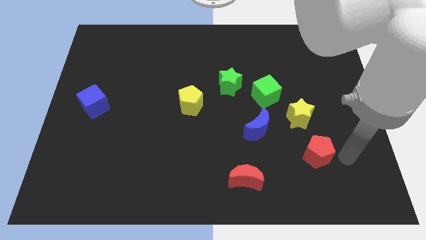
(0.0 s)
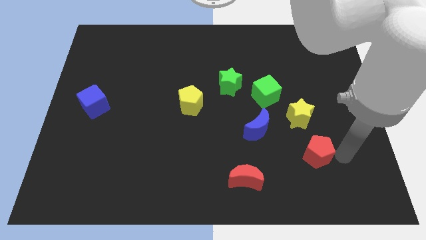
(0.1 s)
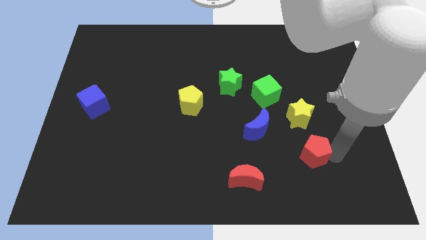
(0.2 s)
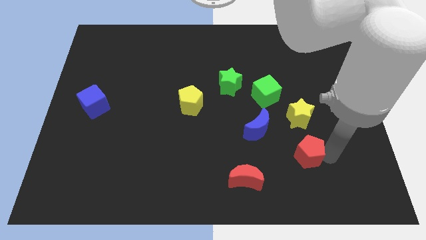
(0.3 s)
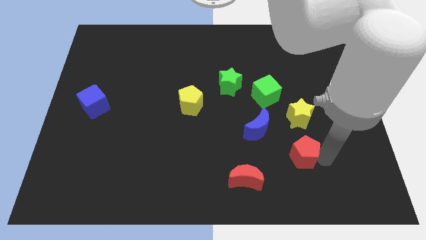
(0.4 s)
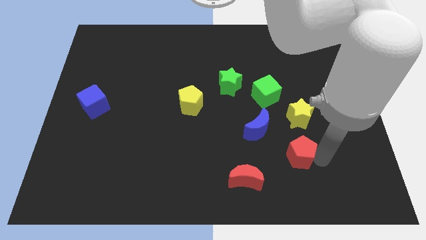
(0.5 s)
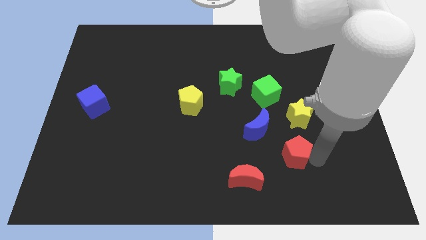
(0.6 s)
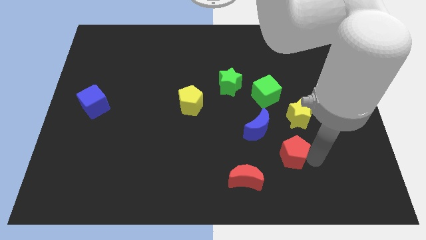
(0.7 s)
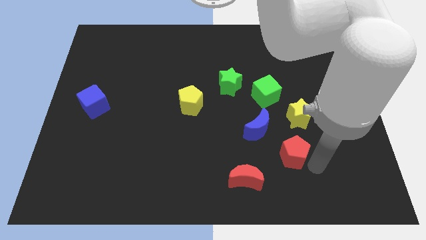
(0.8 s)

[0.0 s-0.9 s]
push the red pentagon towards left

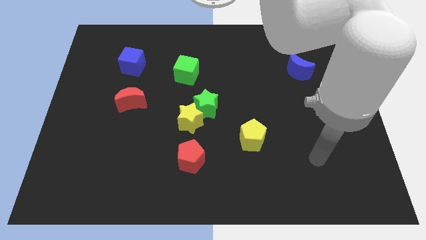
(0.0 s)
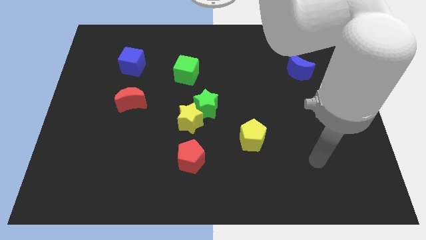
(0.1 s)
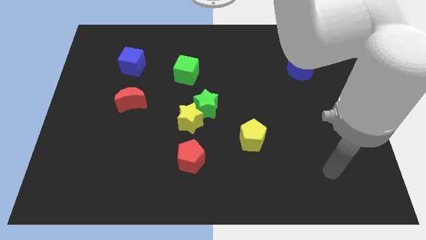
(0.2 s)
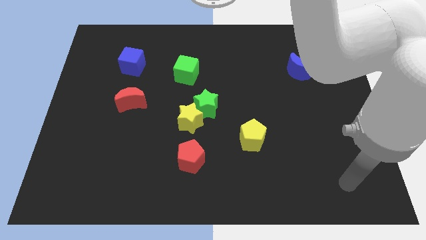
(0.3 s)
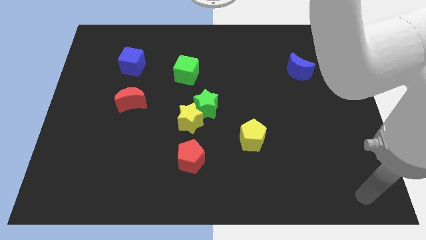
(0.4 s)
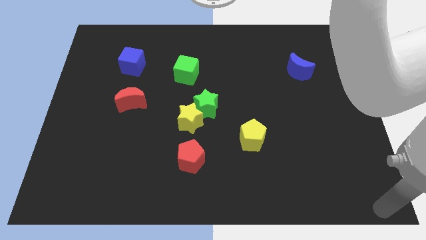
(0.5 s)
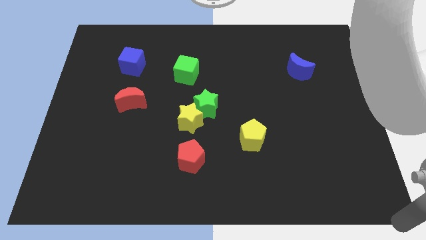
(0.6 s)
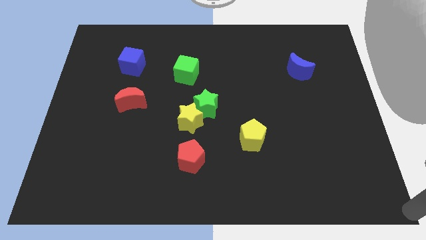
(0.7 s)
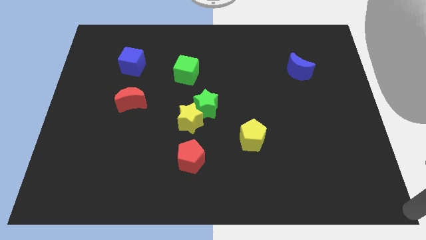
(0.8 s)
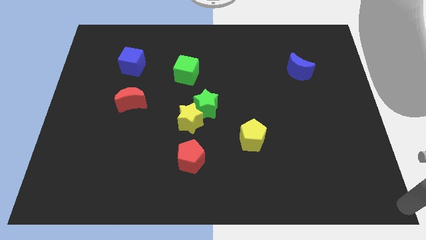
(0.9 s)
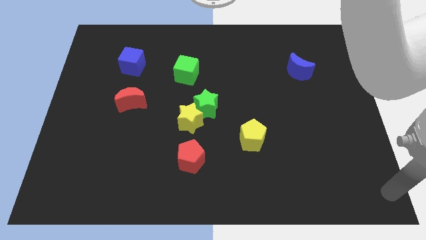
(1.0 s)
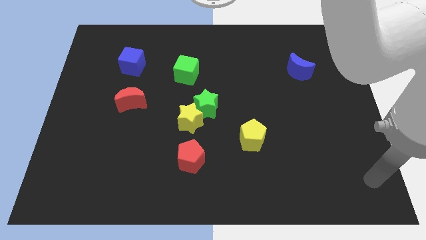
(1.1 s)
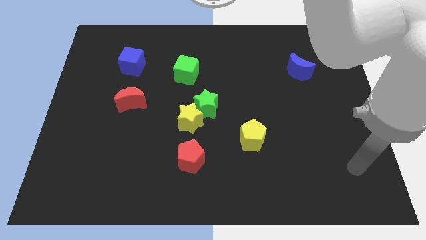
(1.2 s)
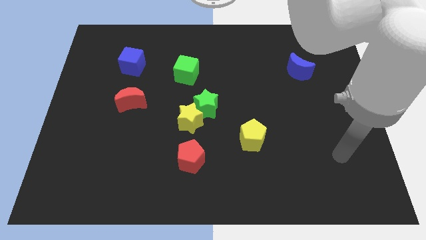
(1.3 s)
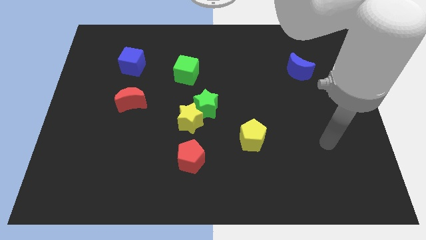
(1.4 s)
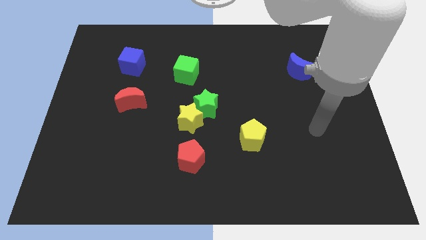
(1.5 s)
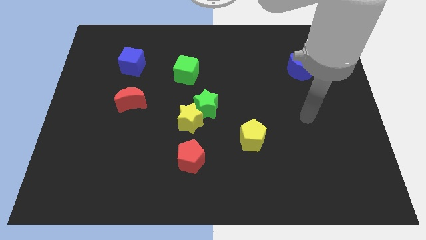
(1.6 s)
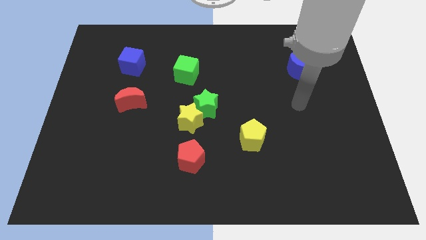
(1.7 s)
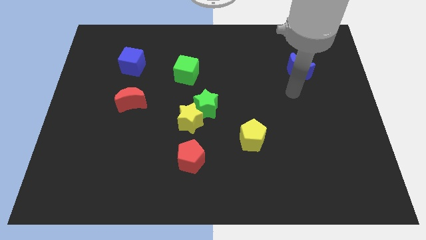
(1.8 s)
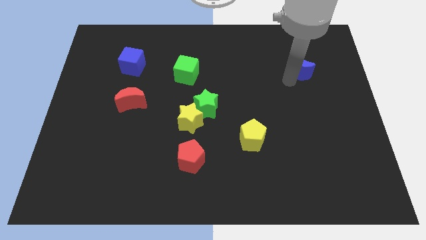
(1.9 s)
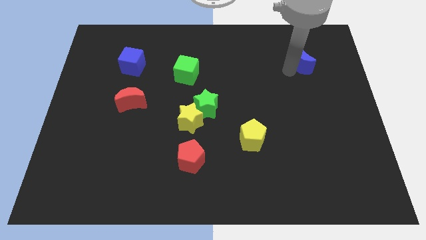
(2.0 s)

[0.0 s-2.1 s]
touch the bottom of blue moon

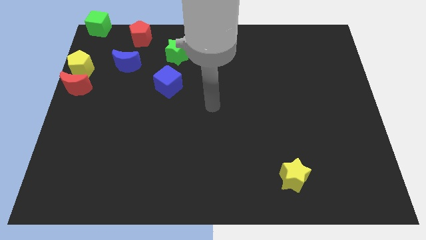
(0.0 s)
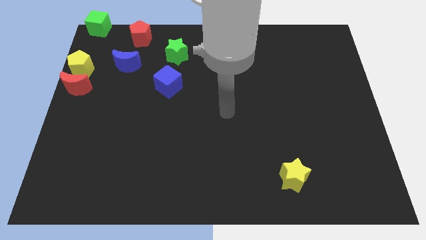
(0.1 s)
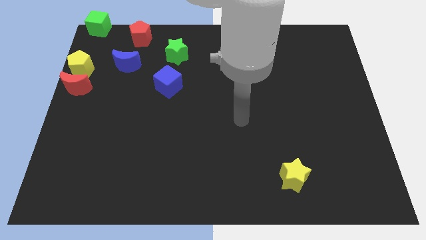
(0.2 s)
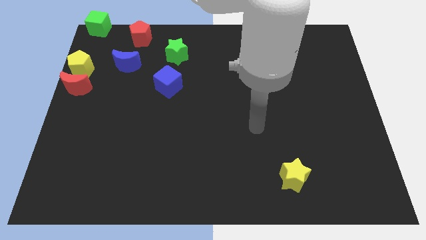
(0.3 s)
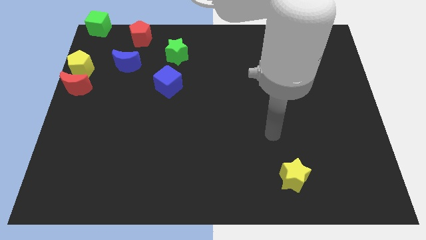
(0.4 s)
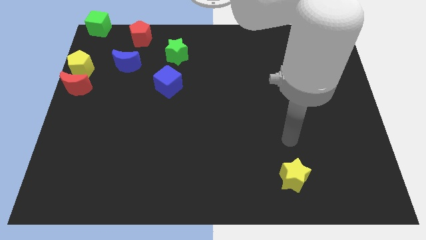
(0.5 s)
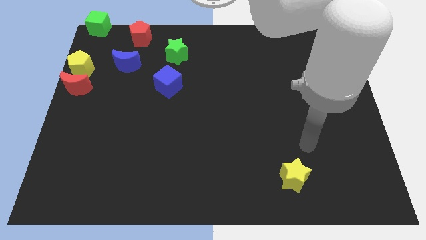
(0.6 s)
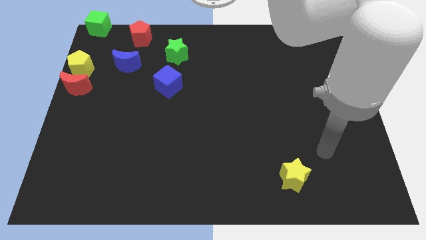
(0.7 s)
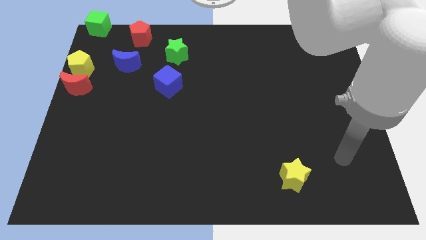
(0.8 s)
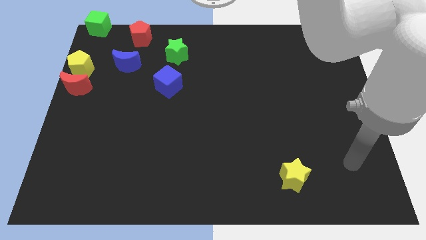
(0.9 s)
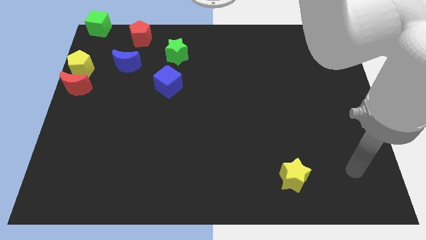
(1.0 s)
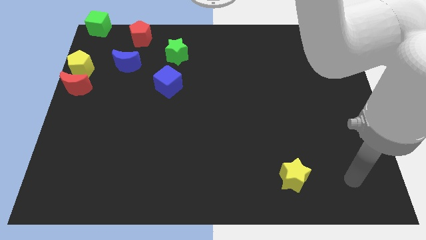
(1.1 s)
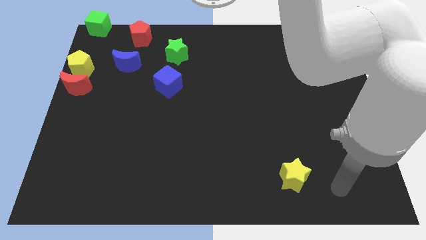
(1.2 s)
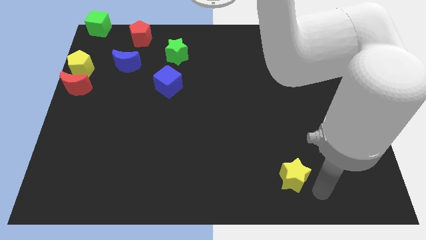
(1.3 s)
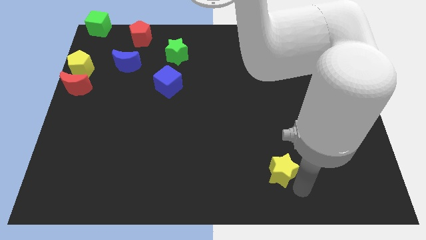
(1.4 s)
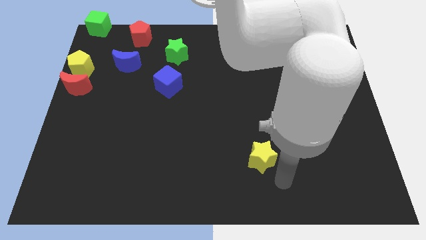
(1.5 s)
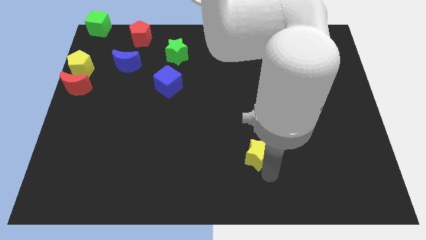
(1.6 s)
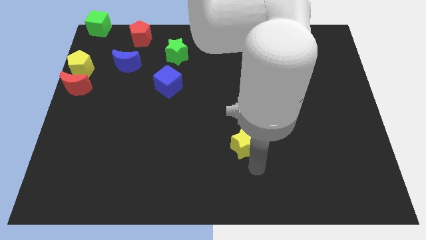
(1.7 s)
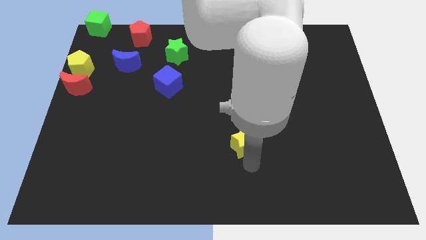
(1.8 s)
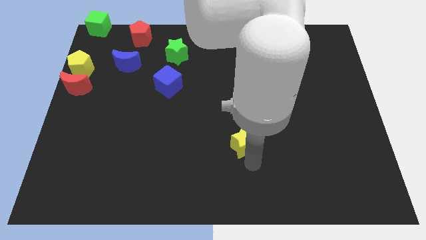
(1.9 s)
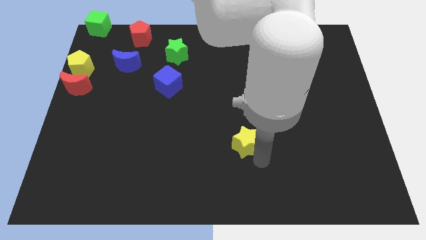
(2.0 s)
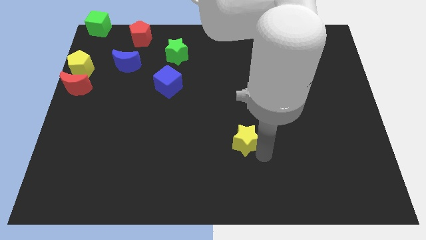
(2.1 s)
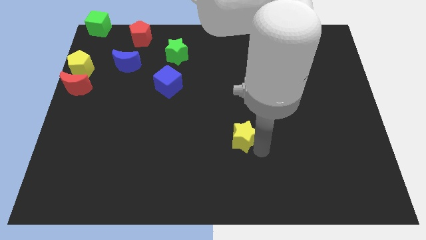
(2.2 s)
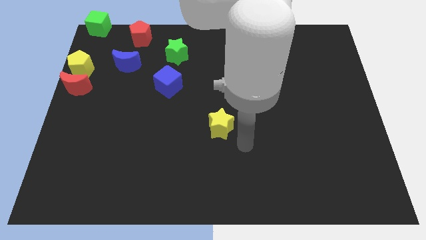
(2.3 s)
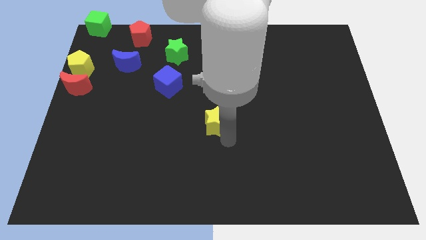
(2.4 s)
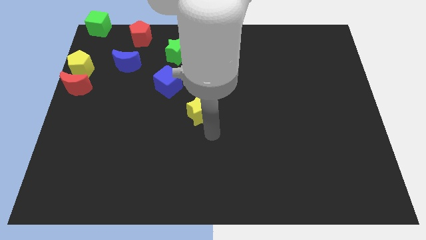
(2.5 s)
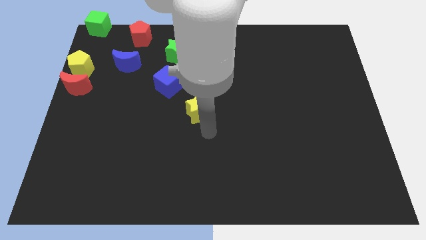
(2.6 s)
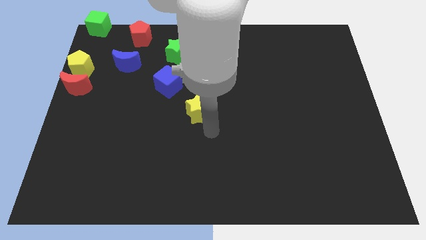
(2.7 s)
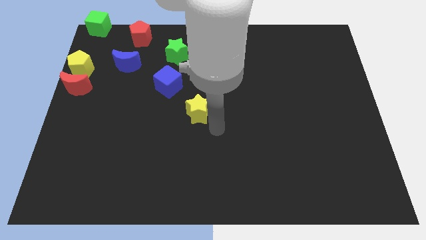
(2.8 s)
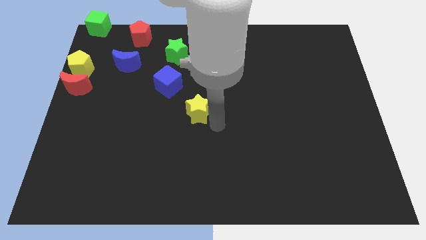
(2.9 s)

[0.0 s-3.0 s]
move the yellow star towards the blue cube

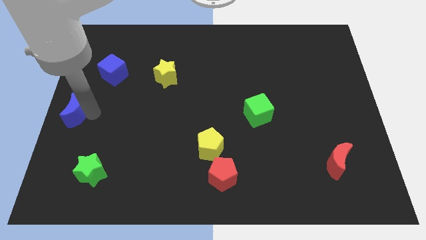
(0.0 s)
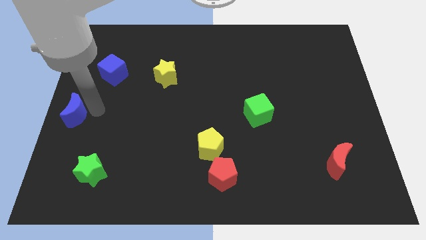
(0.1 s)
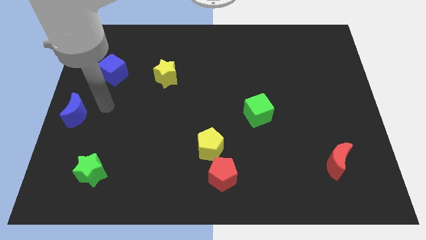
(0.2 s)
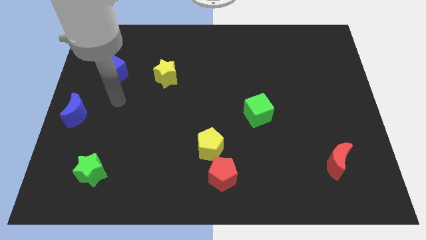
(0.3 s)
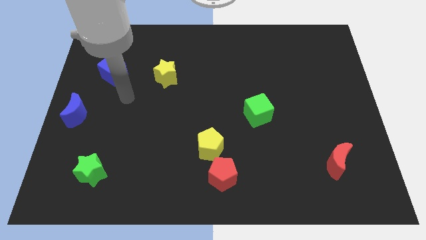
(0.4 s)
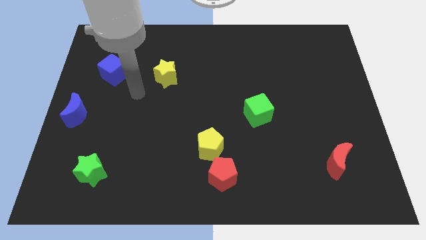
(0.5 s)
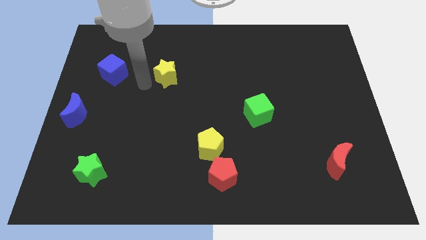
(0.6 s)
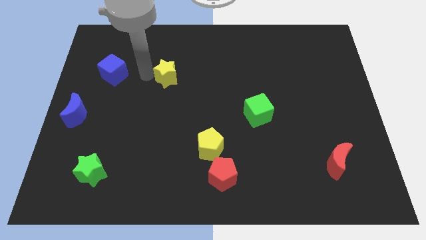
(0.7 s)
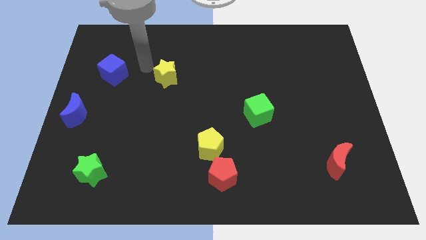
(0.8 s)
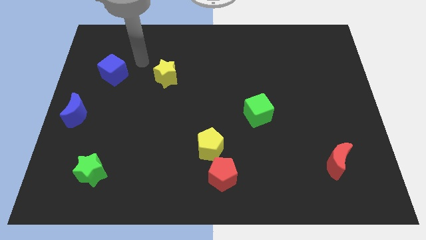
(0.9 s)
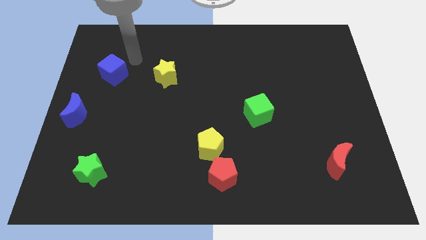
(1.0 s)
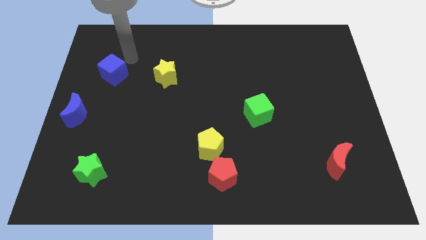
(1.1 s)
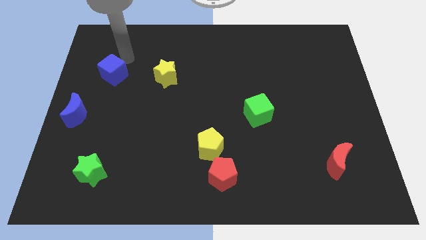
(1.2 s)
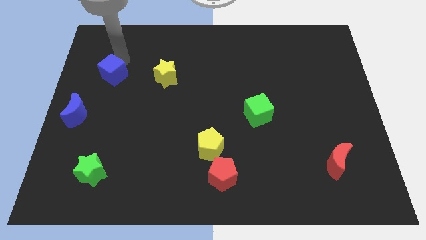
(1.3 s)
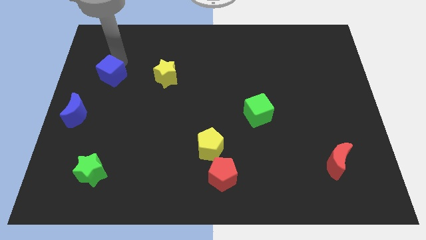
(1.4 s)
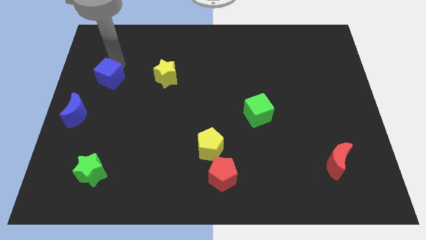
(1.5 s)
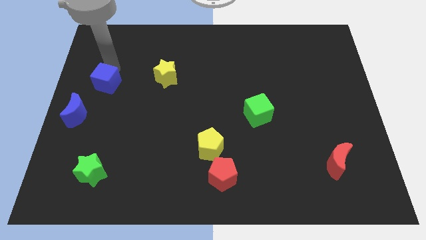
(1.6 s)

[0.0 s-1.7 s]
move the blue cube slightly to the bottom

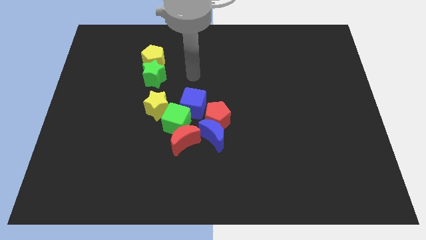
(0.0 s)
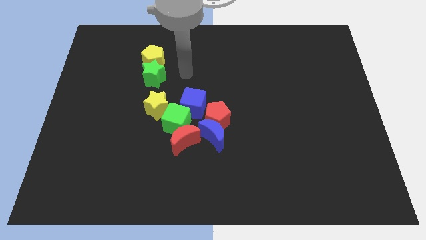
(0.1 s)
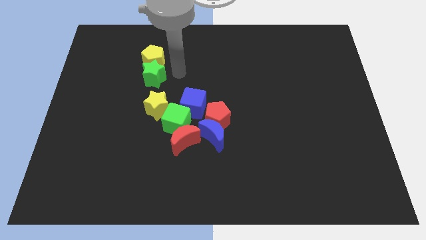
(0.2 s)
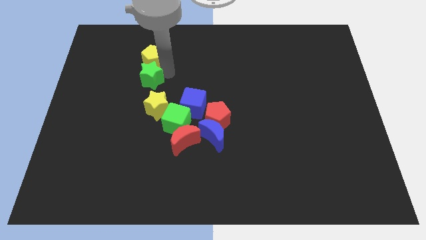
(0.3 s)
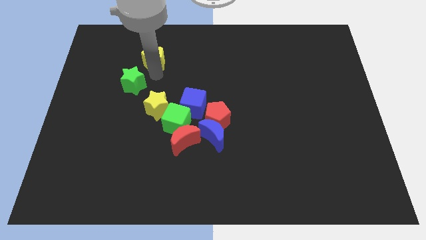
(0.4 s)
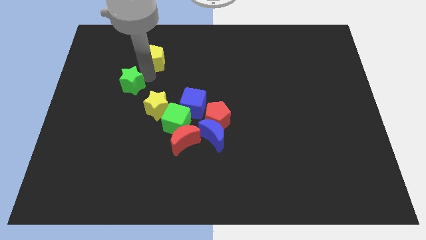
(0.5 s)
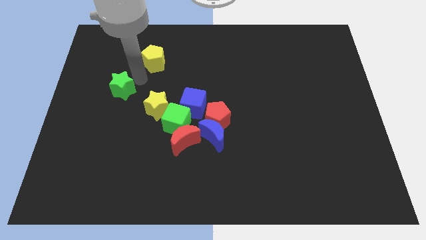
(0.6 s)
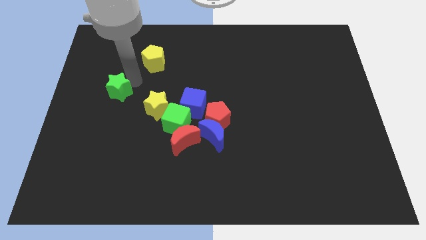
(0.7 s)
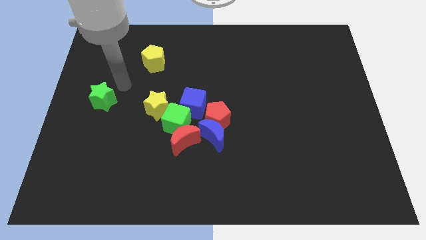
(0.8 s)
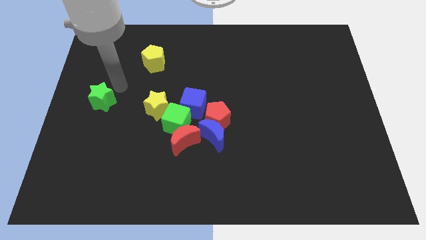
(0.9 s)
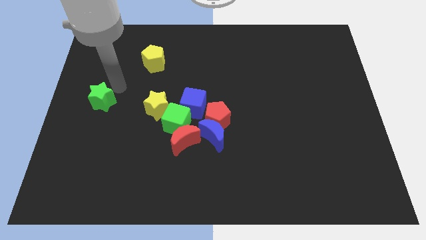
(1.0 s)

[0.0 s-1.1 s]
move green star away from the yellow pentagon
